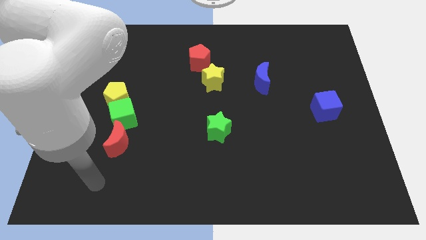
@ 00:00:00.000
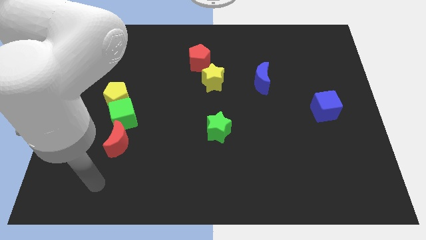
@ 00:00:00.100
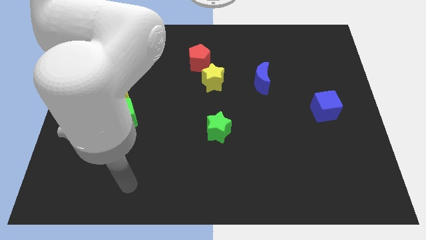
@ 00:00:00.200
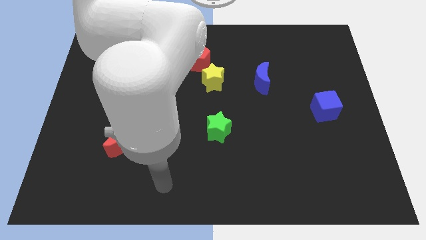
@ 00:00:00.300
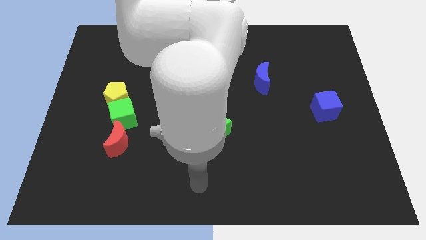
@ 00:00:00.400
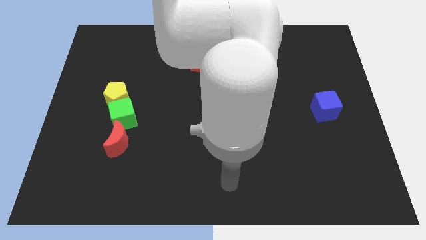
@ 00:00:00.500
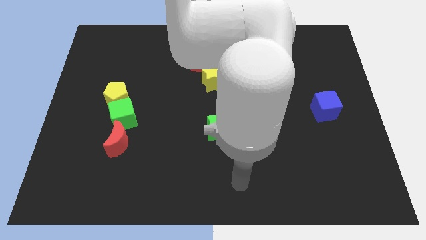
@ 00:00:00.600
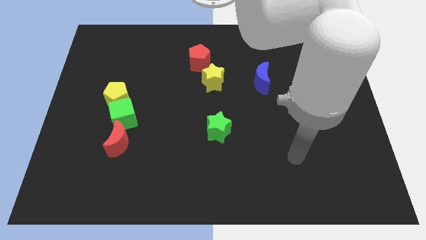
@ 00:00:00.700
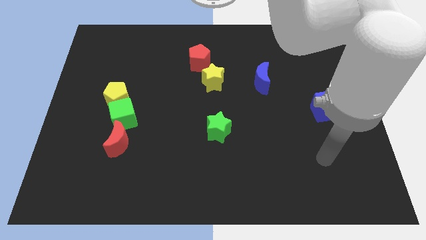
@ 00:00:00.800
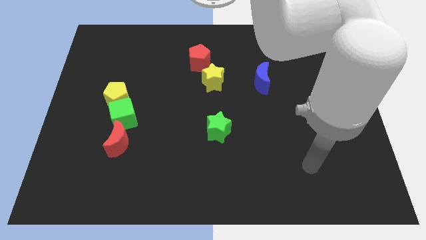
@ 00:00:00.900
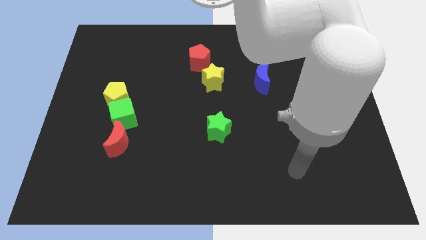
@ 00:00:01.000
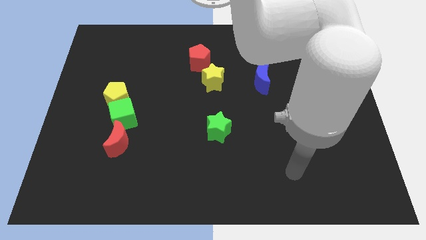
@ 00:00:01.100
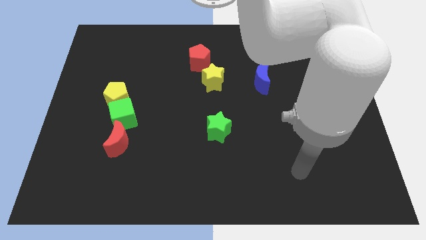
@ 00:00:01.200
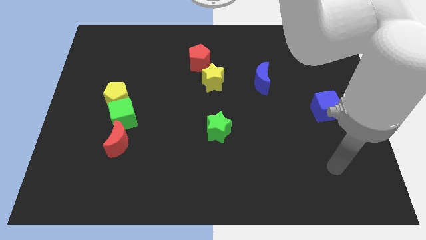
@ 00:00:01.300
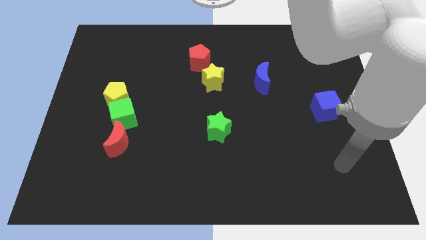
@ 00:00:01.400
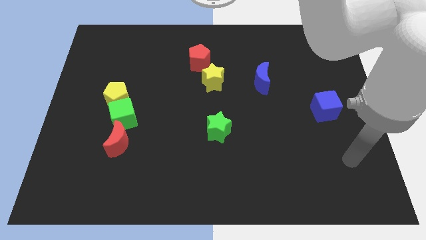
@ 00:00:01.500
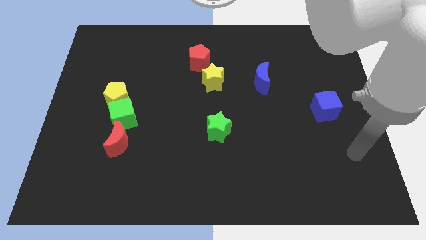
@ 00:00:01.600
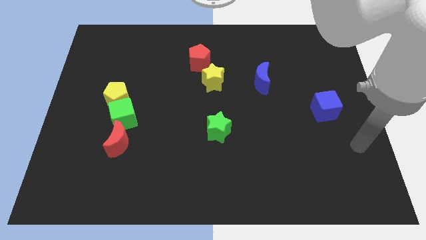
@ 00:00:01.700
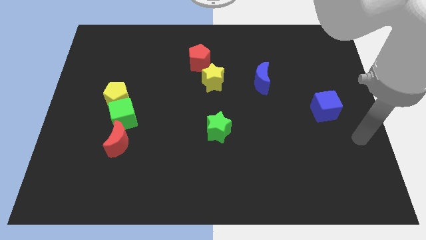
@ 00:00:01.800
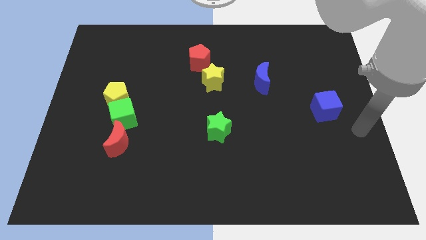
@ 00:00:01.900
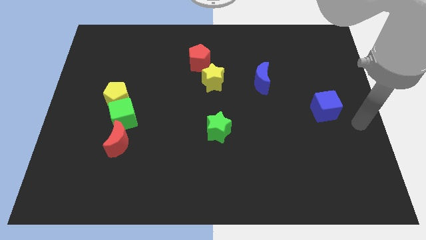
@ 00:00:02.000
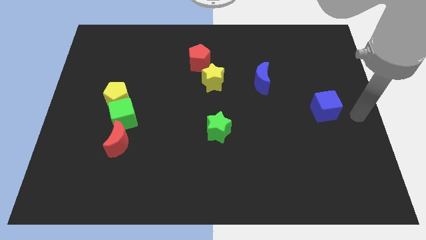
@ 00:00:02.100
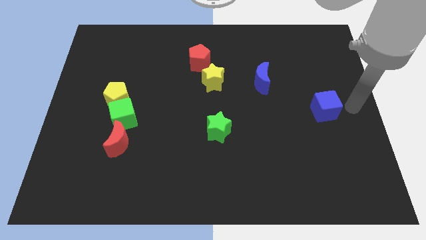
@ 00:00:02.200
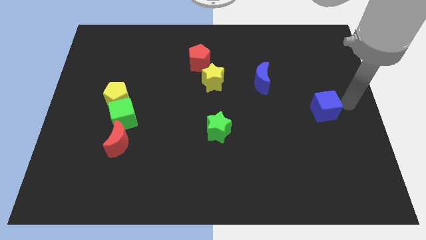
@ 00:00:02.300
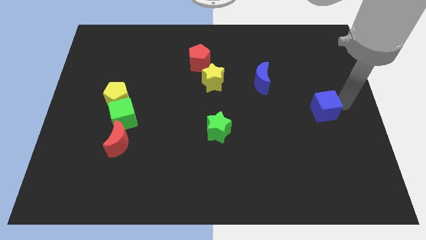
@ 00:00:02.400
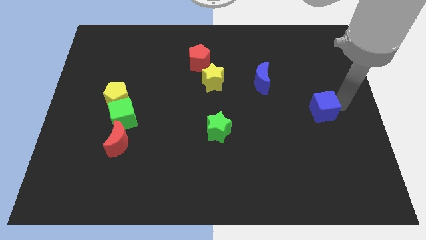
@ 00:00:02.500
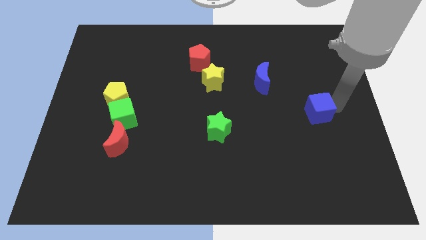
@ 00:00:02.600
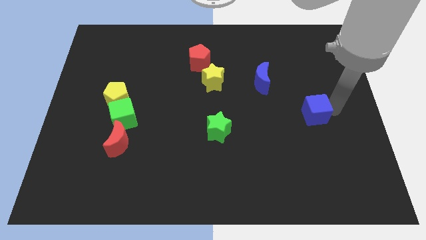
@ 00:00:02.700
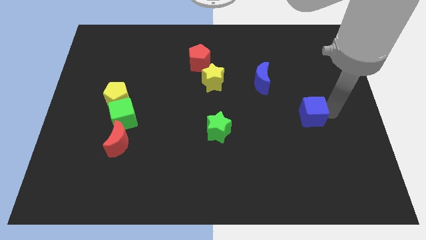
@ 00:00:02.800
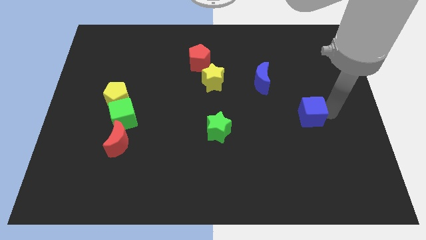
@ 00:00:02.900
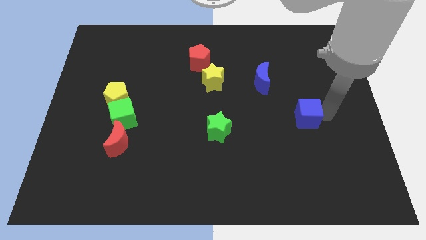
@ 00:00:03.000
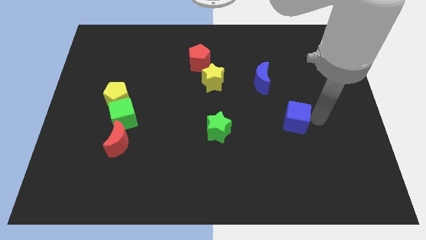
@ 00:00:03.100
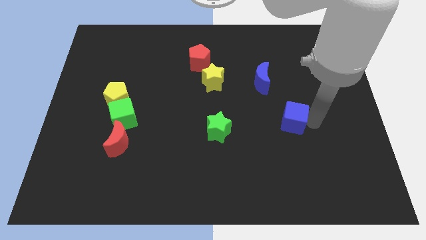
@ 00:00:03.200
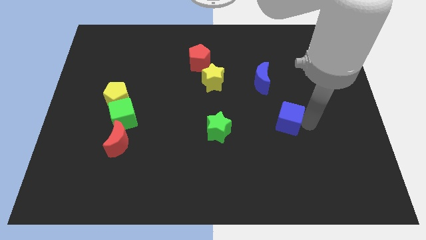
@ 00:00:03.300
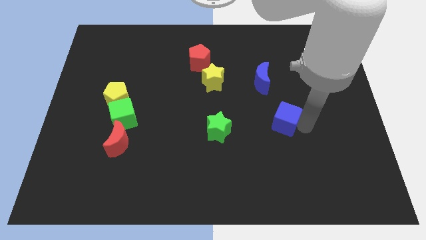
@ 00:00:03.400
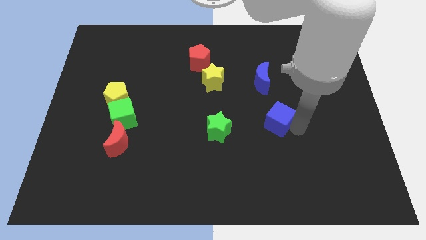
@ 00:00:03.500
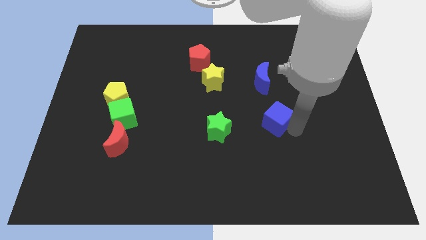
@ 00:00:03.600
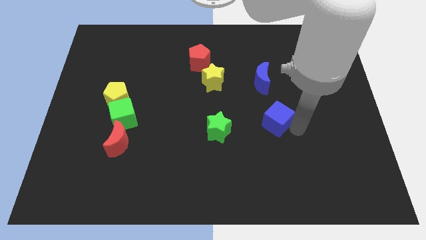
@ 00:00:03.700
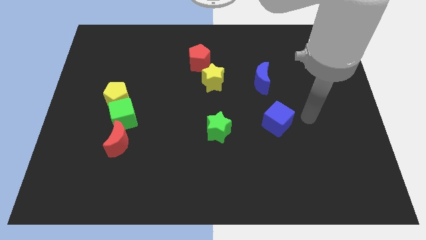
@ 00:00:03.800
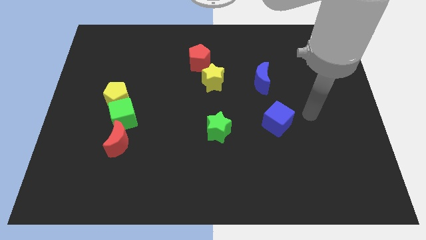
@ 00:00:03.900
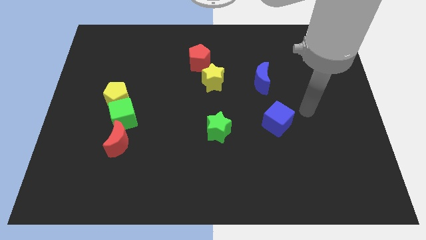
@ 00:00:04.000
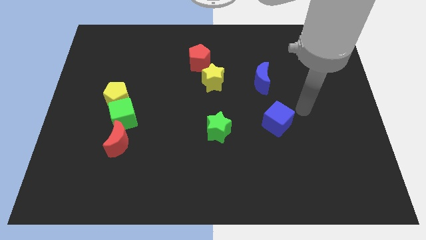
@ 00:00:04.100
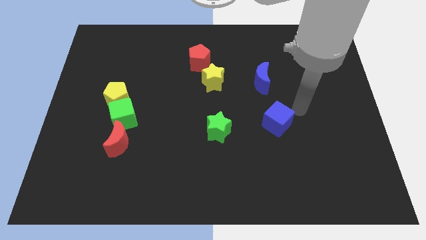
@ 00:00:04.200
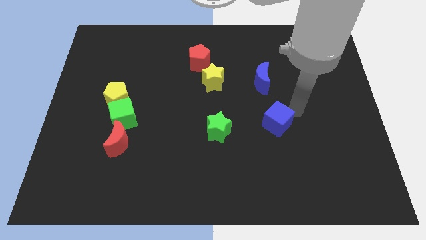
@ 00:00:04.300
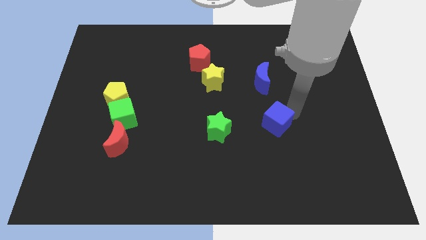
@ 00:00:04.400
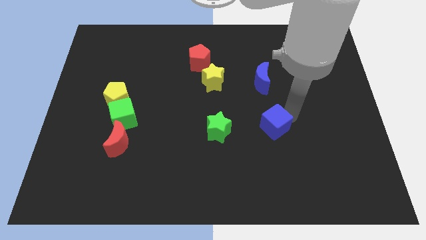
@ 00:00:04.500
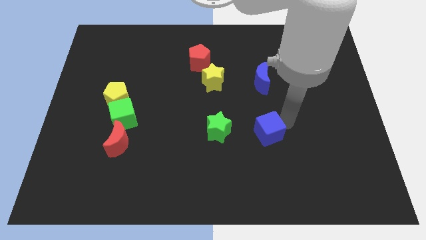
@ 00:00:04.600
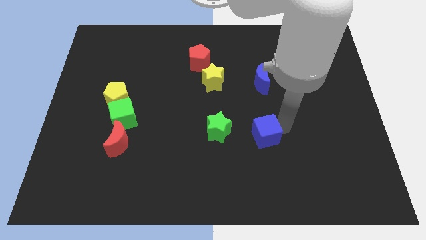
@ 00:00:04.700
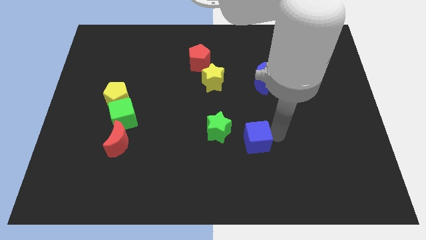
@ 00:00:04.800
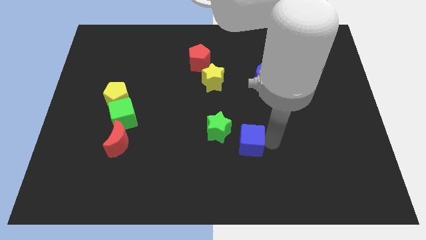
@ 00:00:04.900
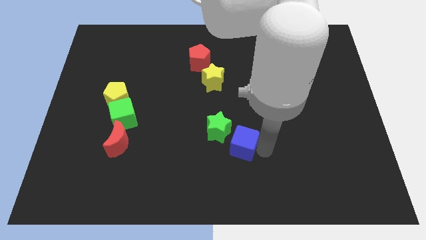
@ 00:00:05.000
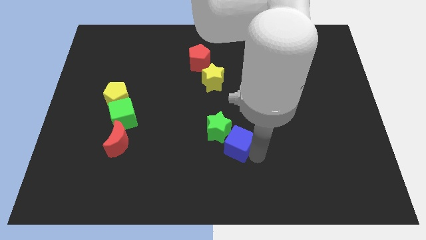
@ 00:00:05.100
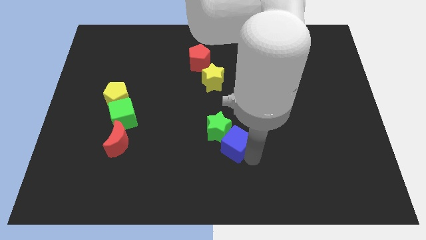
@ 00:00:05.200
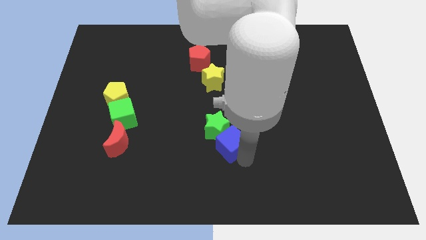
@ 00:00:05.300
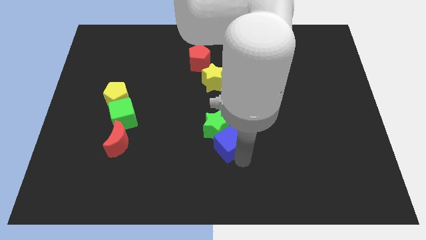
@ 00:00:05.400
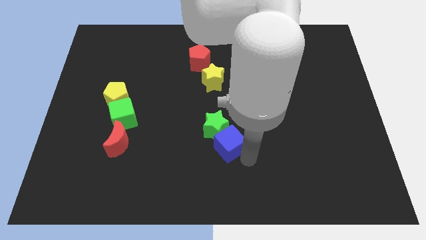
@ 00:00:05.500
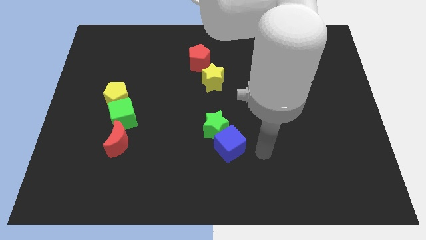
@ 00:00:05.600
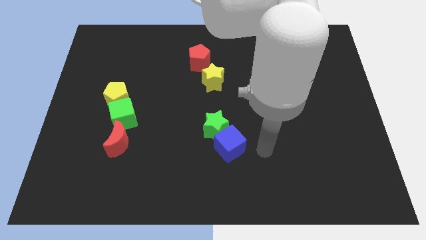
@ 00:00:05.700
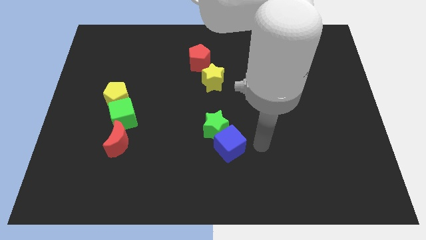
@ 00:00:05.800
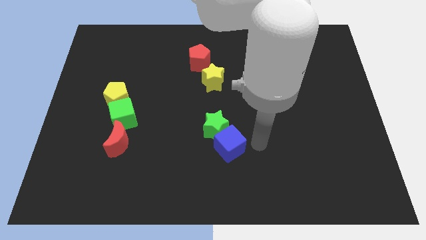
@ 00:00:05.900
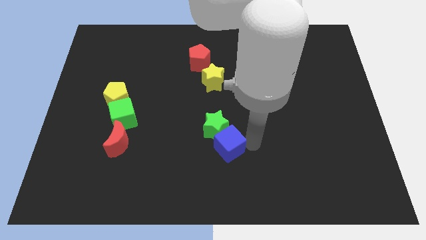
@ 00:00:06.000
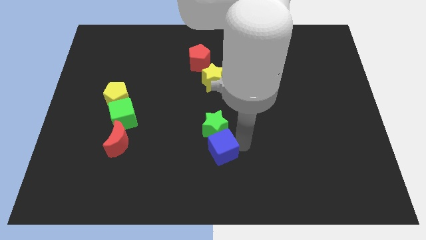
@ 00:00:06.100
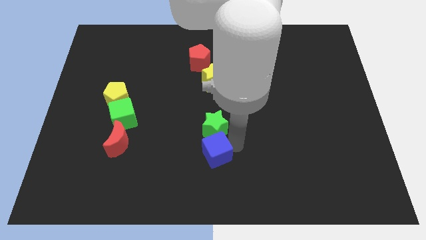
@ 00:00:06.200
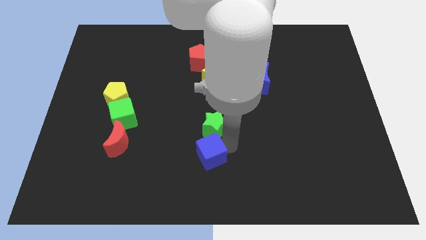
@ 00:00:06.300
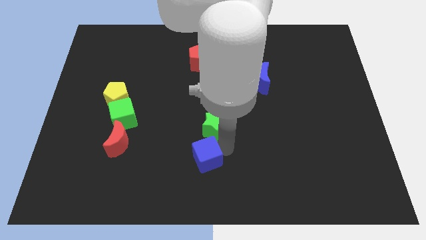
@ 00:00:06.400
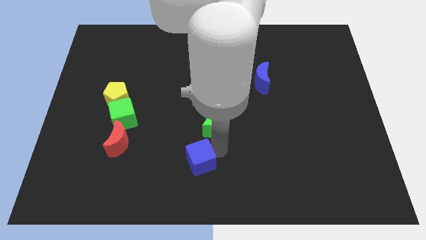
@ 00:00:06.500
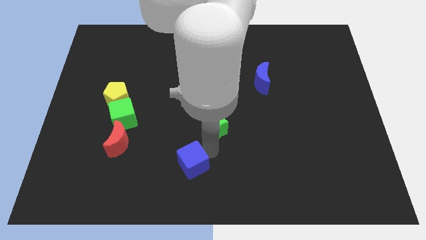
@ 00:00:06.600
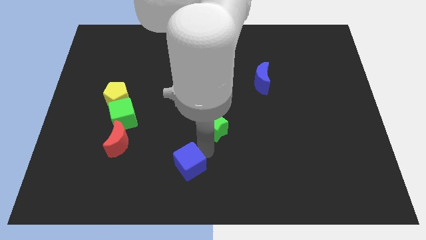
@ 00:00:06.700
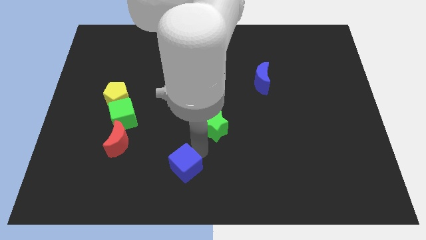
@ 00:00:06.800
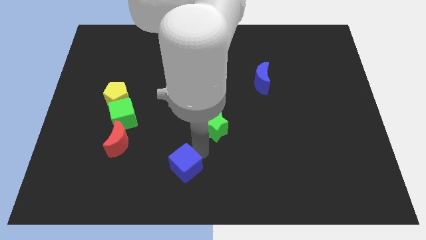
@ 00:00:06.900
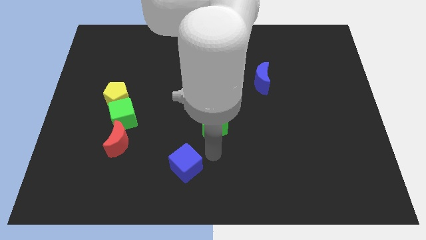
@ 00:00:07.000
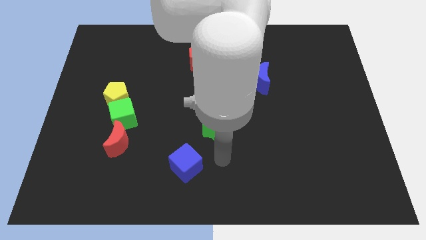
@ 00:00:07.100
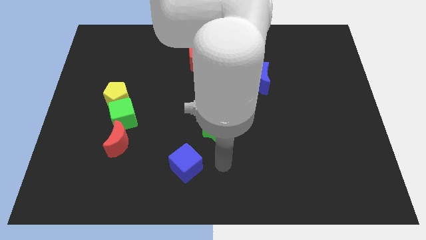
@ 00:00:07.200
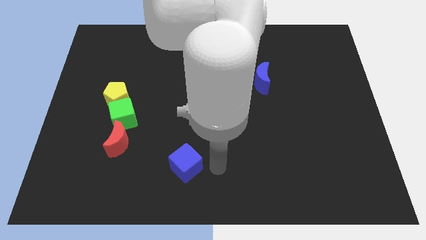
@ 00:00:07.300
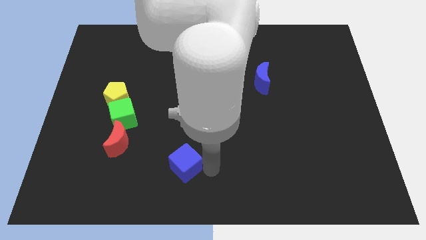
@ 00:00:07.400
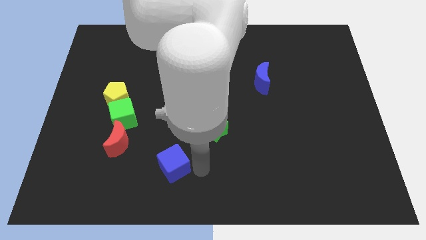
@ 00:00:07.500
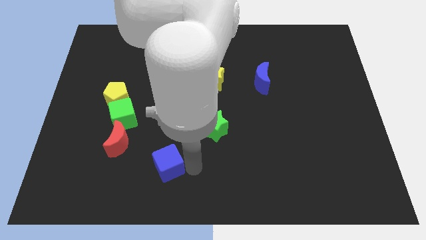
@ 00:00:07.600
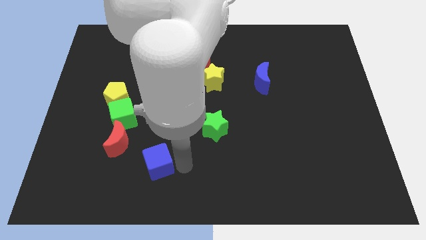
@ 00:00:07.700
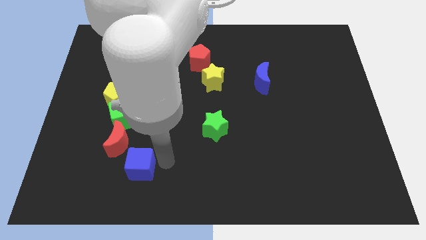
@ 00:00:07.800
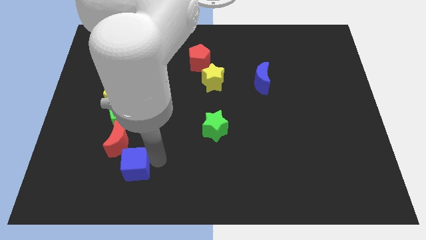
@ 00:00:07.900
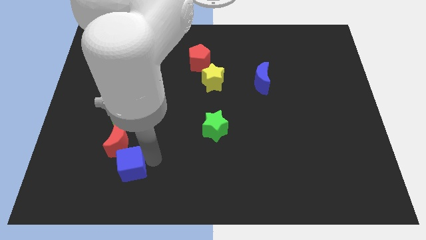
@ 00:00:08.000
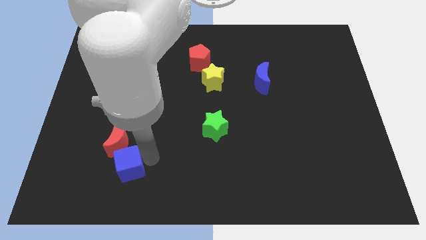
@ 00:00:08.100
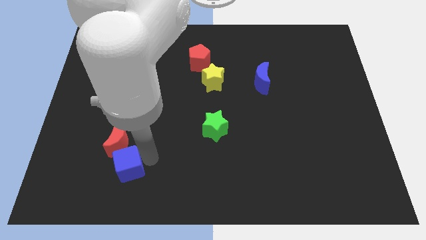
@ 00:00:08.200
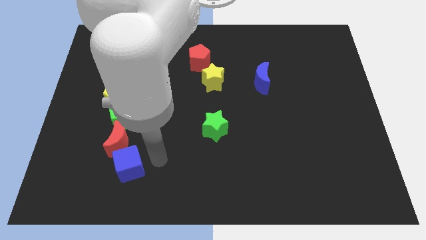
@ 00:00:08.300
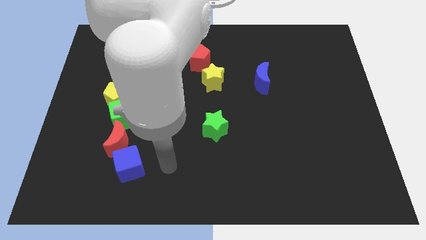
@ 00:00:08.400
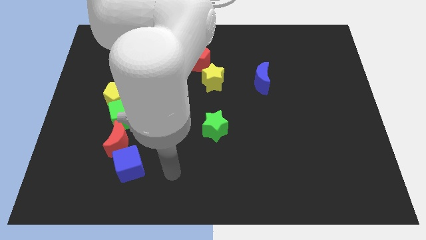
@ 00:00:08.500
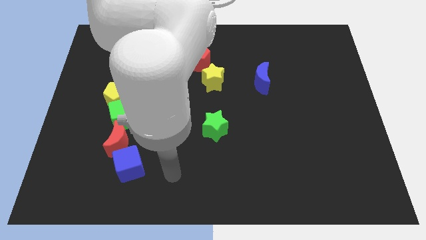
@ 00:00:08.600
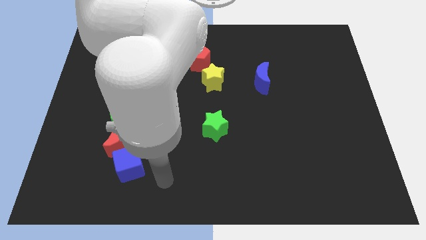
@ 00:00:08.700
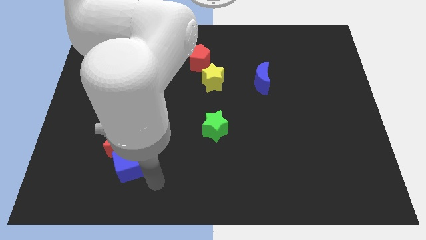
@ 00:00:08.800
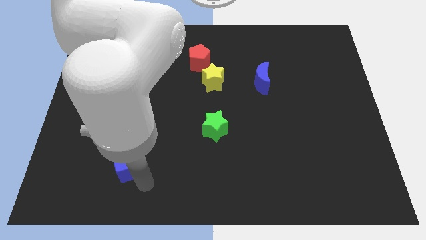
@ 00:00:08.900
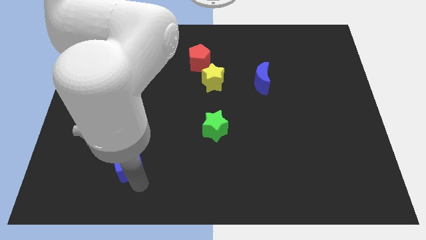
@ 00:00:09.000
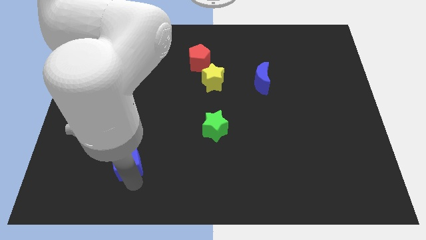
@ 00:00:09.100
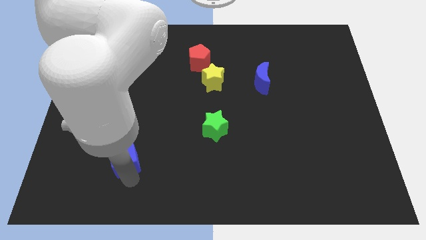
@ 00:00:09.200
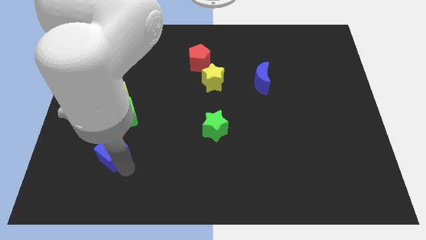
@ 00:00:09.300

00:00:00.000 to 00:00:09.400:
move the blue cube towards the red moon
